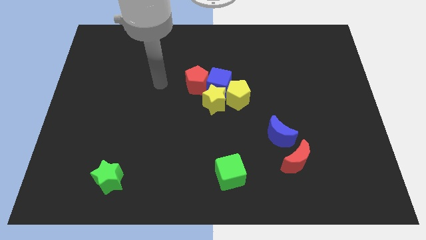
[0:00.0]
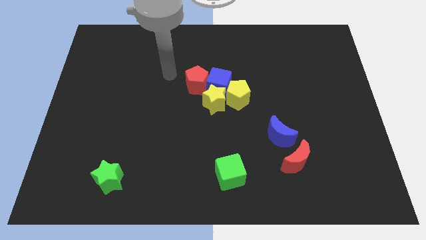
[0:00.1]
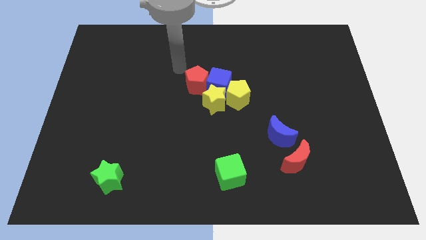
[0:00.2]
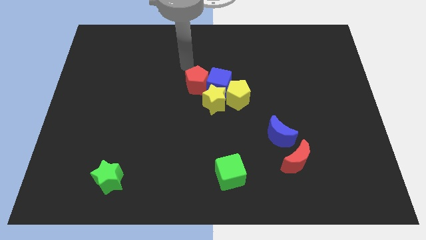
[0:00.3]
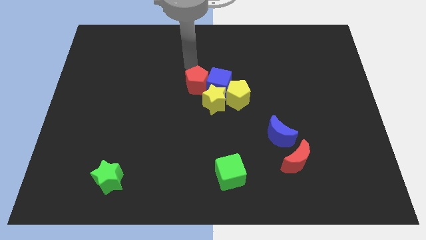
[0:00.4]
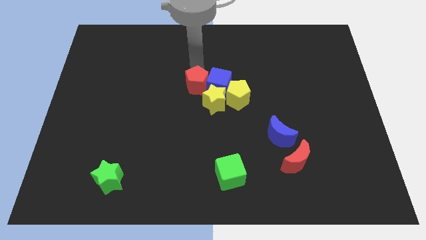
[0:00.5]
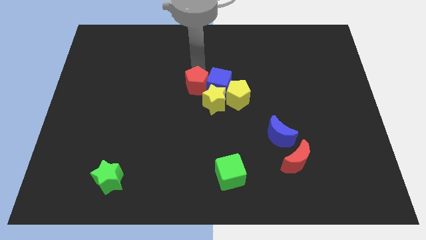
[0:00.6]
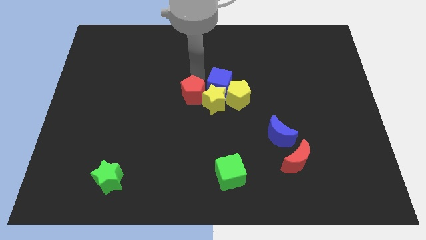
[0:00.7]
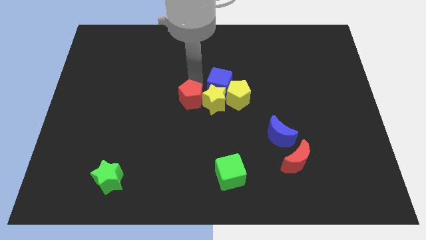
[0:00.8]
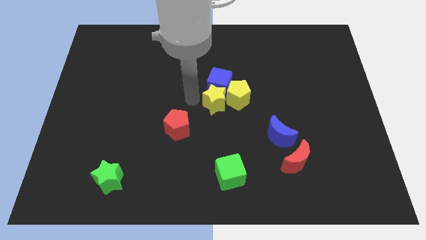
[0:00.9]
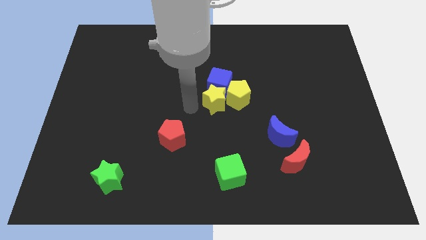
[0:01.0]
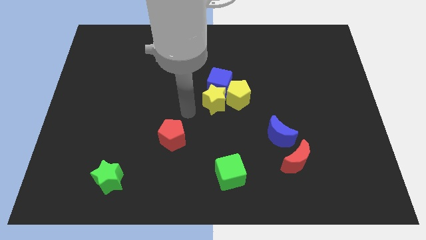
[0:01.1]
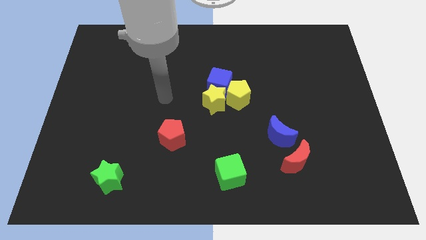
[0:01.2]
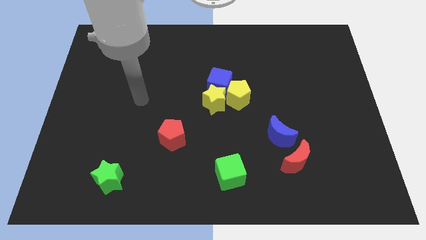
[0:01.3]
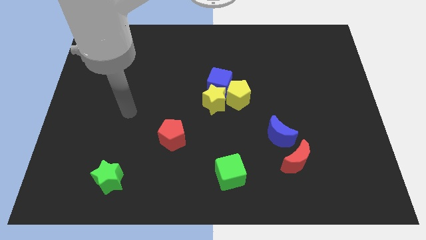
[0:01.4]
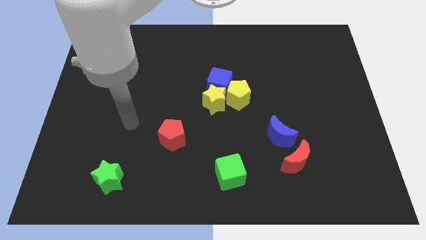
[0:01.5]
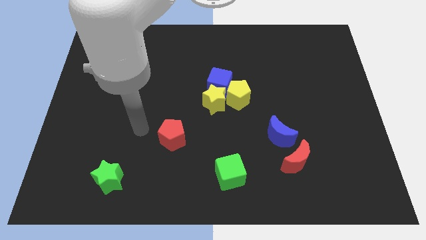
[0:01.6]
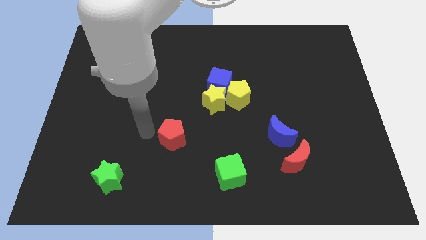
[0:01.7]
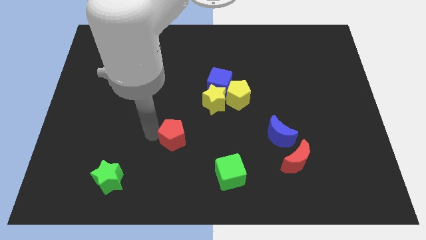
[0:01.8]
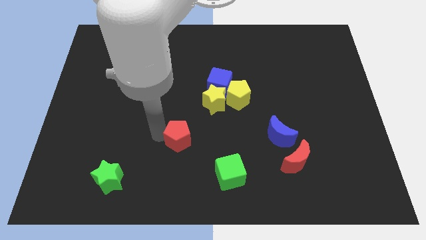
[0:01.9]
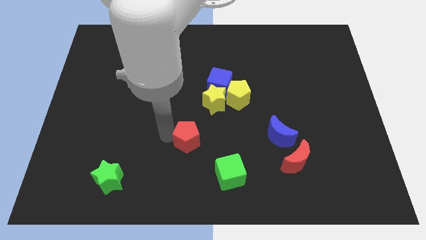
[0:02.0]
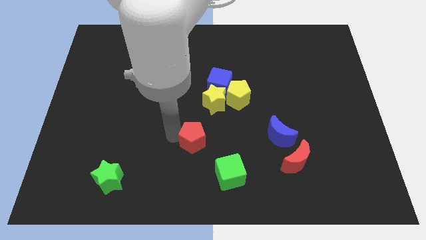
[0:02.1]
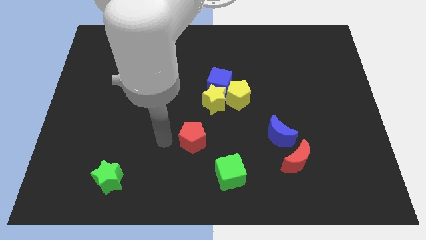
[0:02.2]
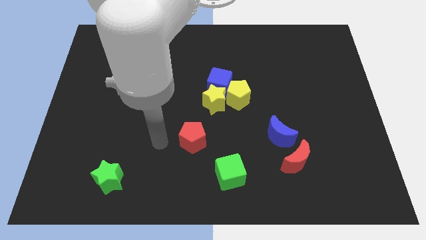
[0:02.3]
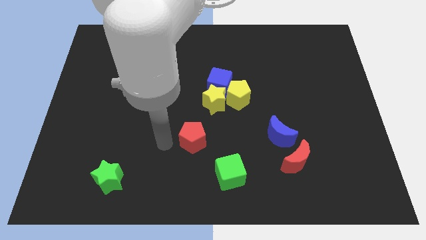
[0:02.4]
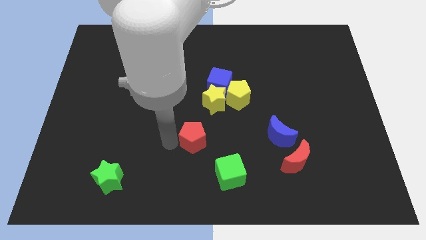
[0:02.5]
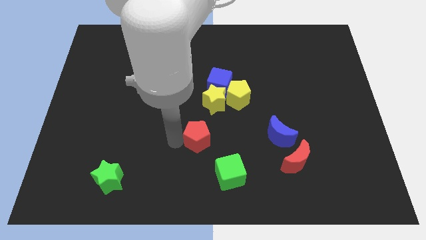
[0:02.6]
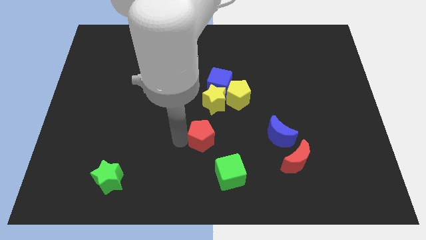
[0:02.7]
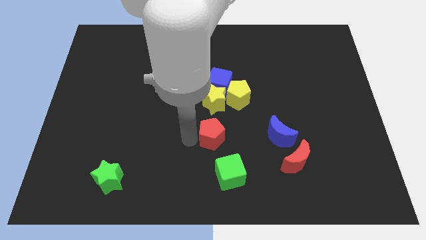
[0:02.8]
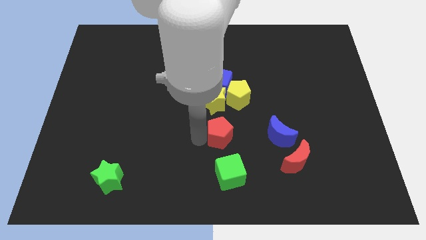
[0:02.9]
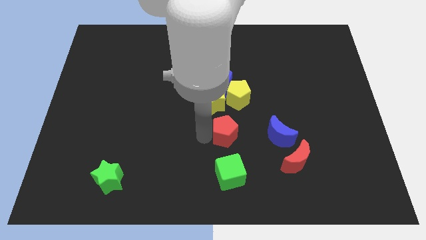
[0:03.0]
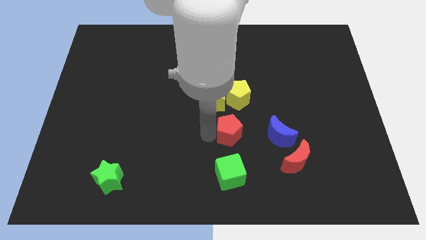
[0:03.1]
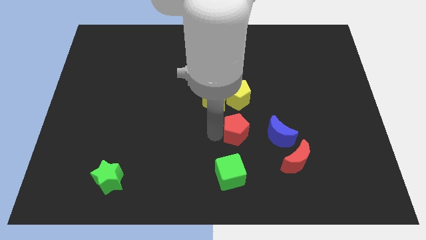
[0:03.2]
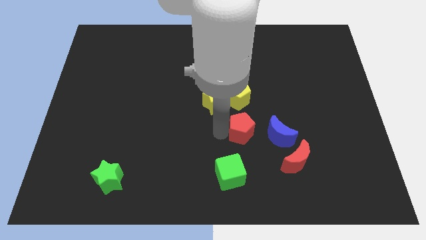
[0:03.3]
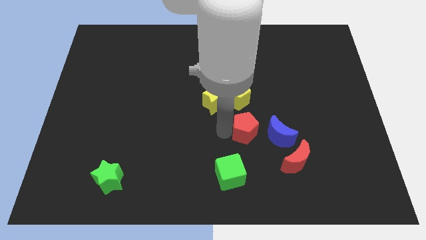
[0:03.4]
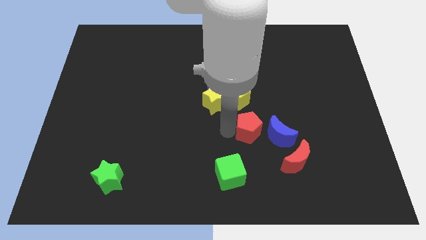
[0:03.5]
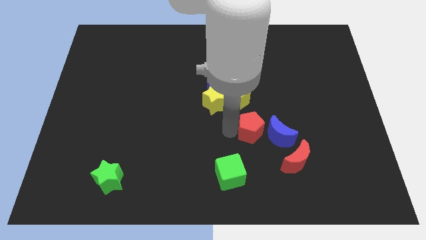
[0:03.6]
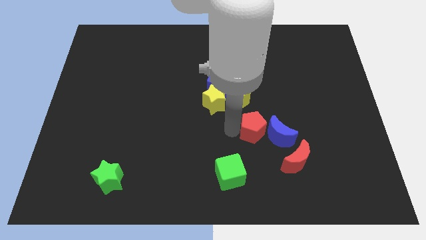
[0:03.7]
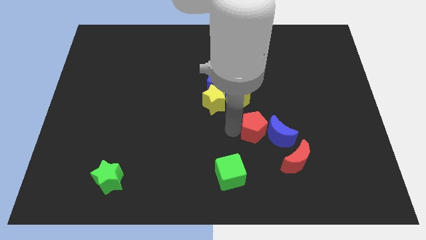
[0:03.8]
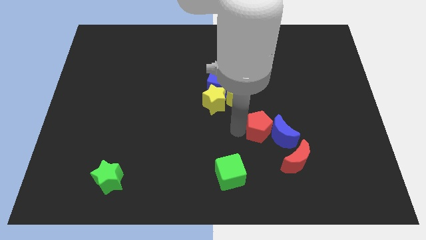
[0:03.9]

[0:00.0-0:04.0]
put the red pentagon close to the blue moon

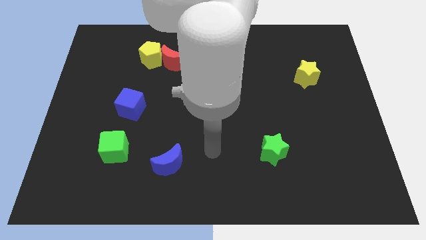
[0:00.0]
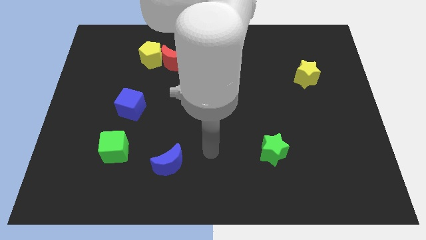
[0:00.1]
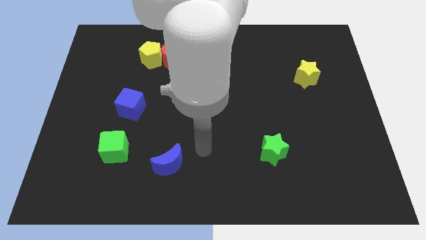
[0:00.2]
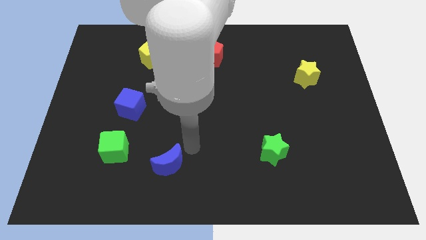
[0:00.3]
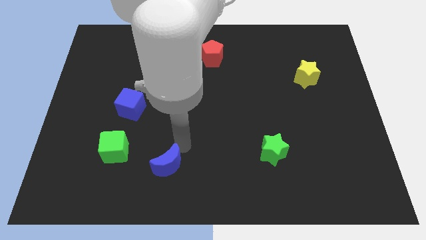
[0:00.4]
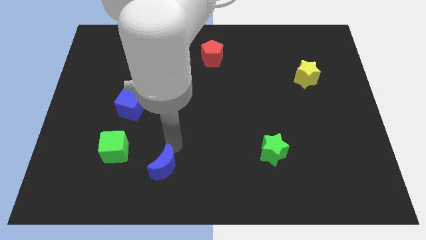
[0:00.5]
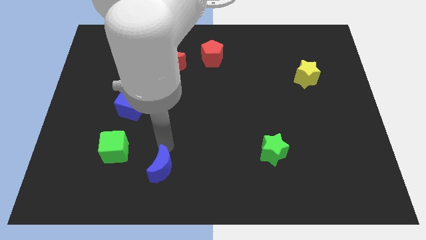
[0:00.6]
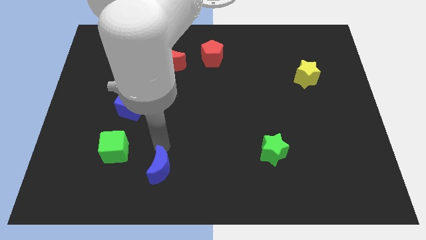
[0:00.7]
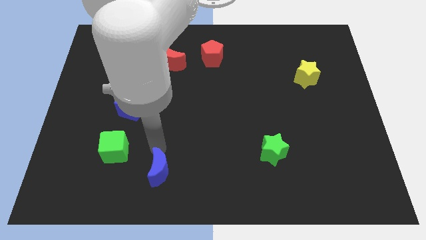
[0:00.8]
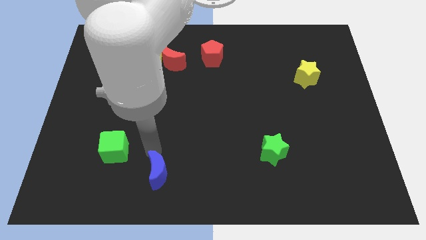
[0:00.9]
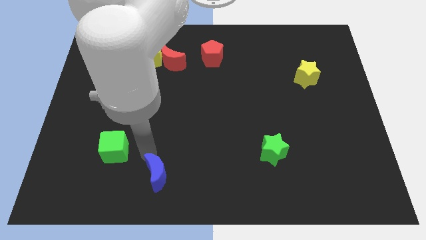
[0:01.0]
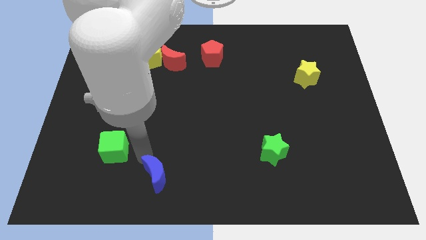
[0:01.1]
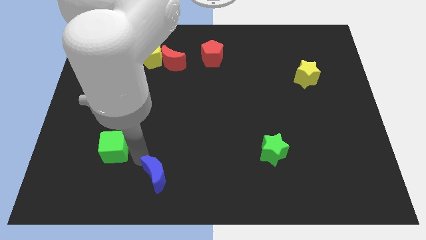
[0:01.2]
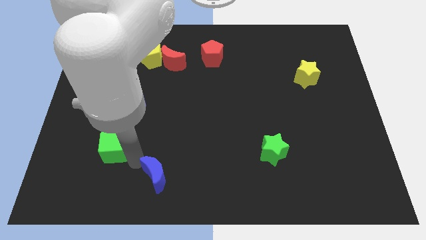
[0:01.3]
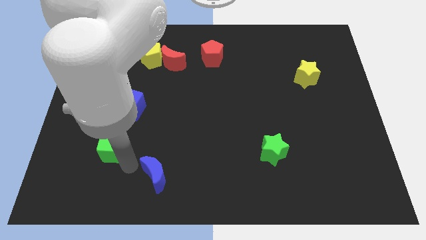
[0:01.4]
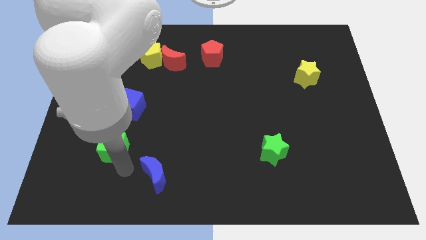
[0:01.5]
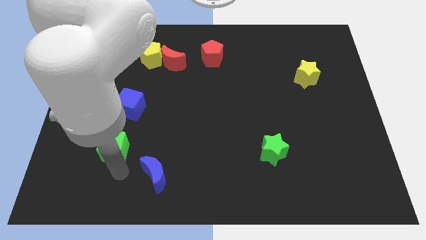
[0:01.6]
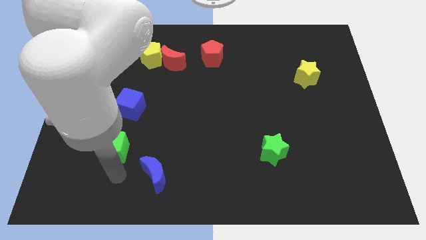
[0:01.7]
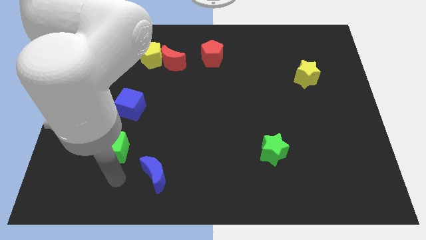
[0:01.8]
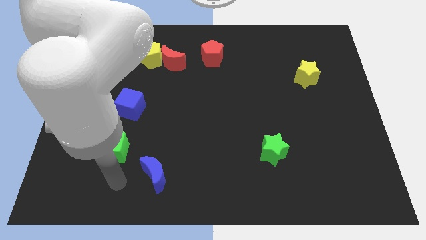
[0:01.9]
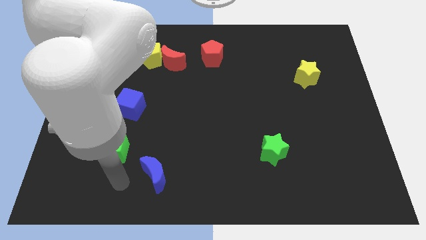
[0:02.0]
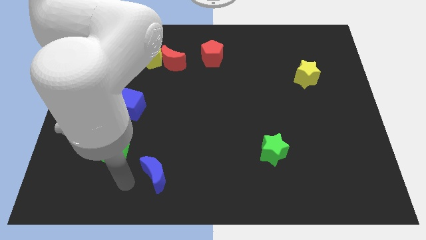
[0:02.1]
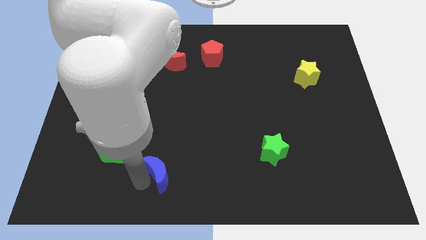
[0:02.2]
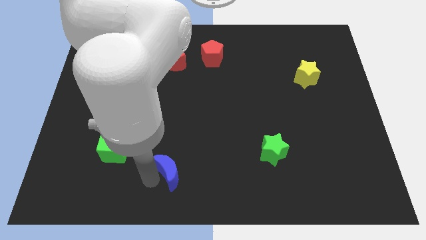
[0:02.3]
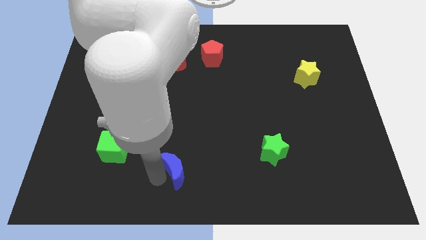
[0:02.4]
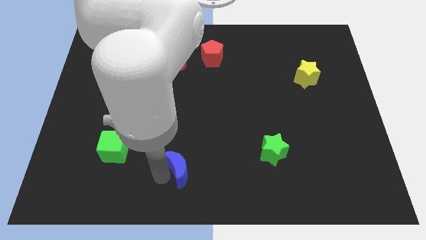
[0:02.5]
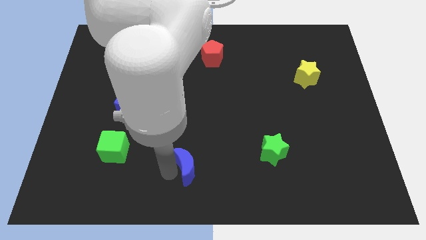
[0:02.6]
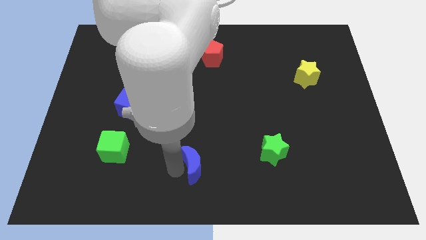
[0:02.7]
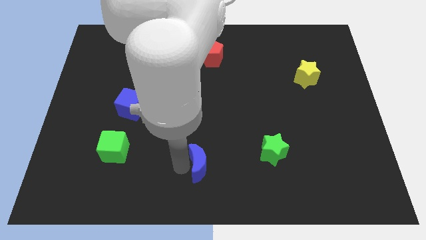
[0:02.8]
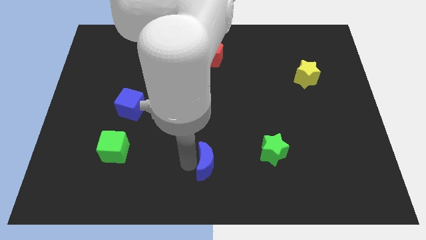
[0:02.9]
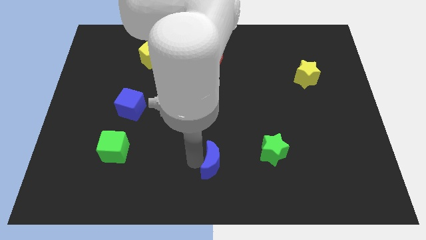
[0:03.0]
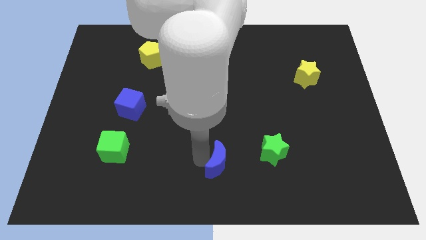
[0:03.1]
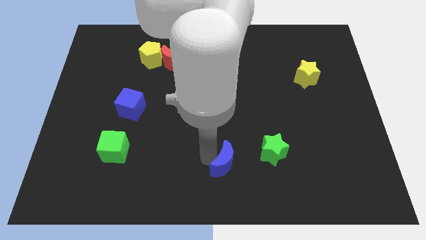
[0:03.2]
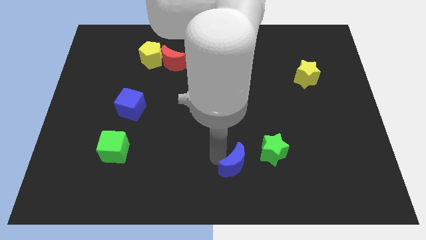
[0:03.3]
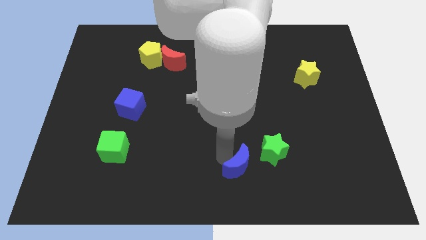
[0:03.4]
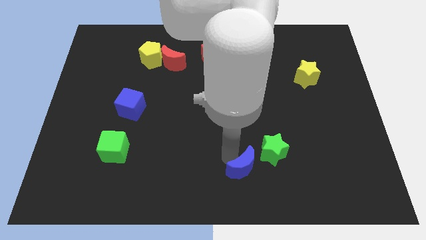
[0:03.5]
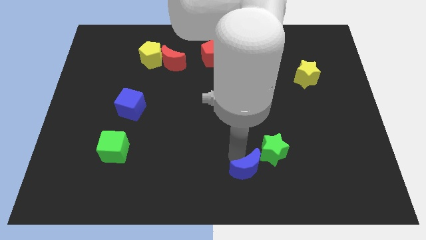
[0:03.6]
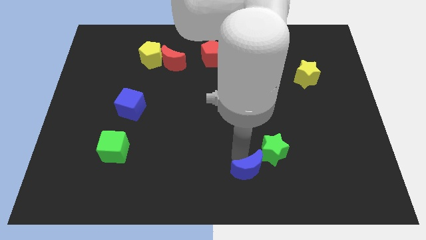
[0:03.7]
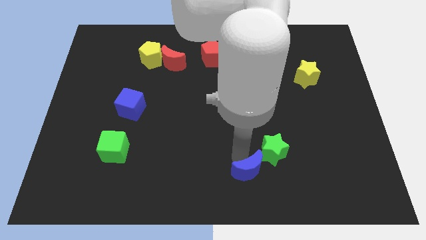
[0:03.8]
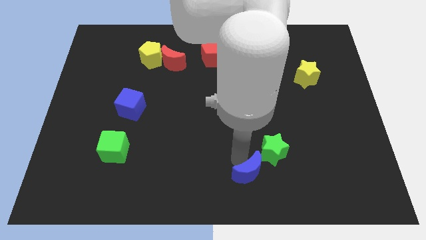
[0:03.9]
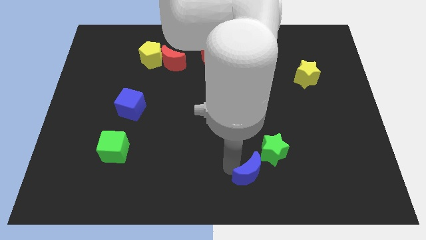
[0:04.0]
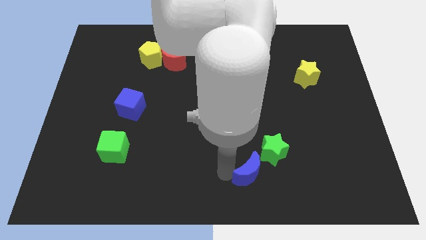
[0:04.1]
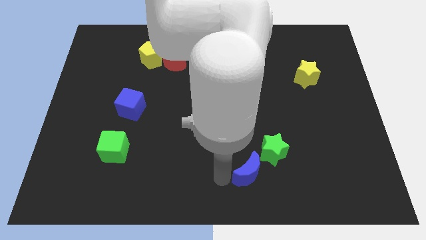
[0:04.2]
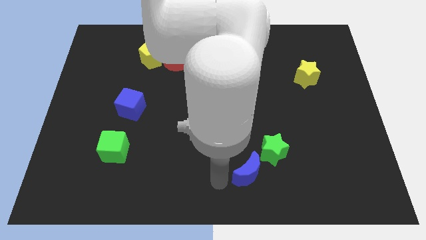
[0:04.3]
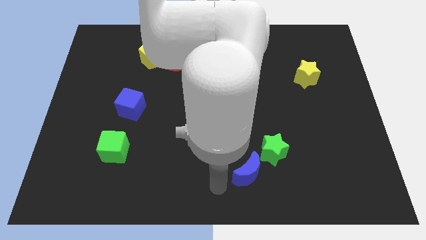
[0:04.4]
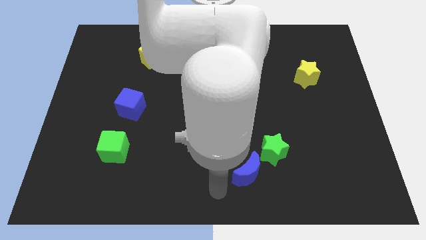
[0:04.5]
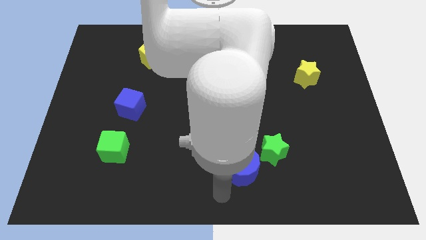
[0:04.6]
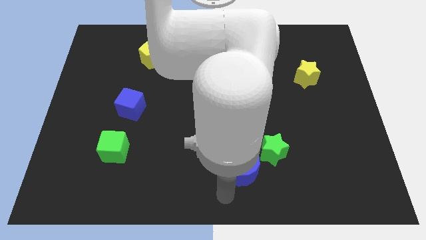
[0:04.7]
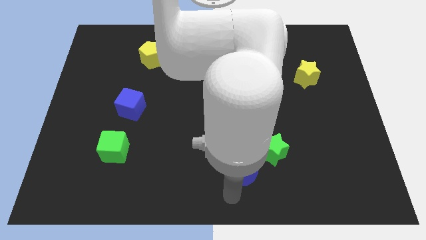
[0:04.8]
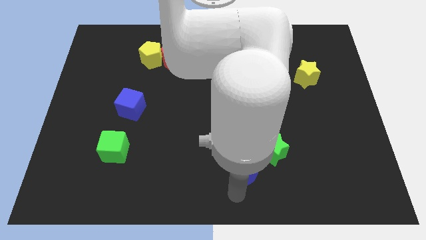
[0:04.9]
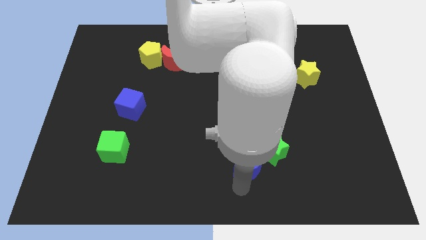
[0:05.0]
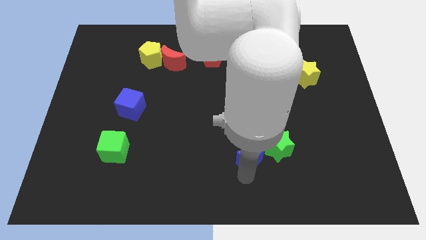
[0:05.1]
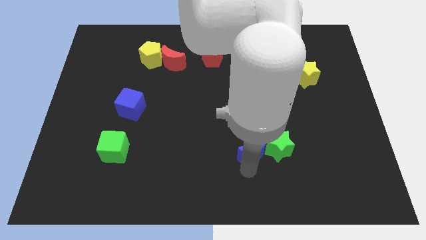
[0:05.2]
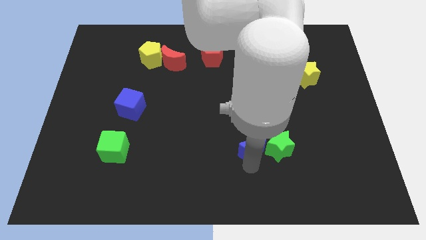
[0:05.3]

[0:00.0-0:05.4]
slide the blue moon to the green star
